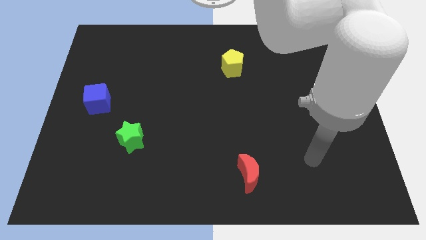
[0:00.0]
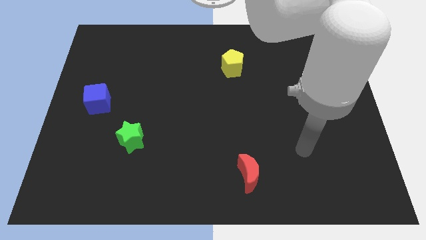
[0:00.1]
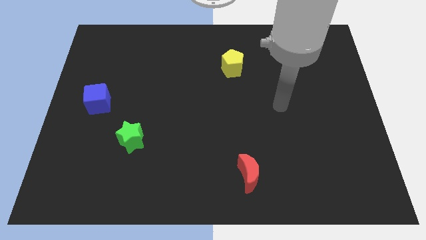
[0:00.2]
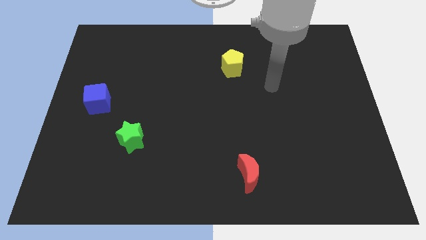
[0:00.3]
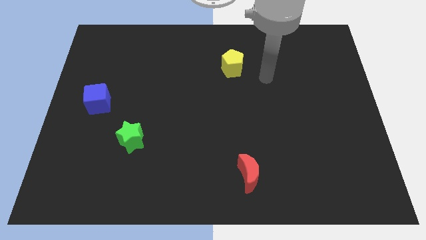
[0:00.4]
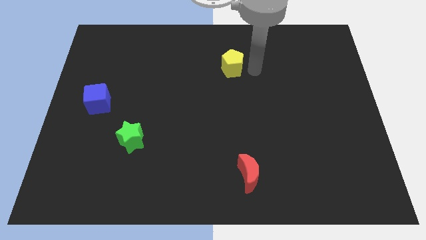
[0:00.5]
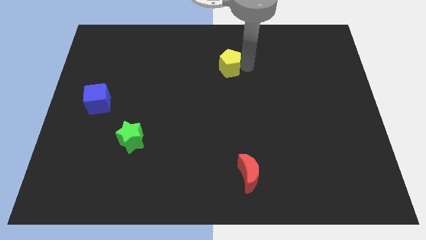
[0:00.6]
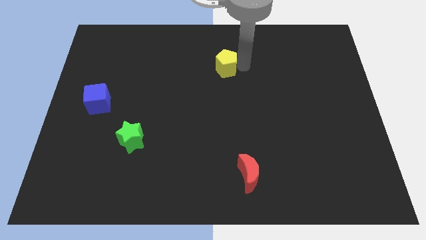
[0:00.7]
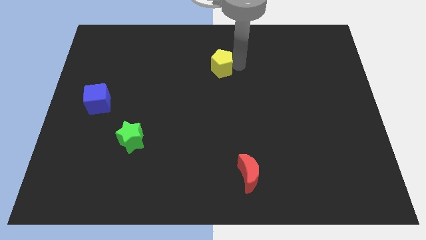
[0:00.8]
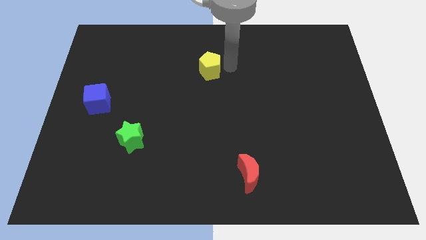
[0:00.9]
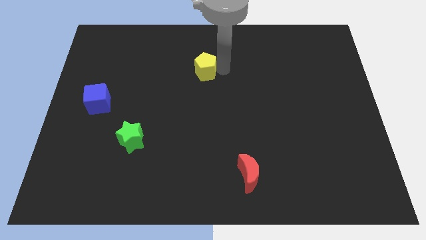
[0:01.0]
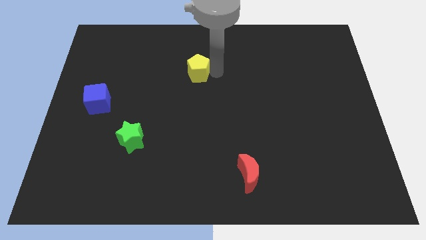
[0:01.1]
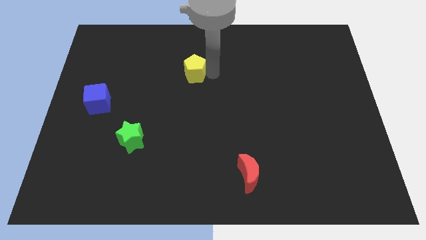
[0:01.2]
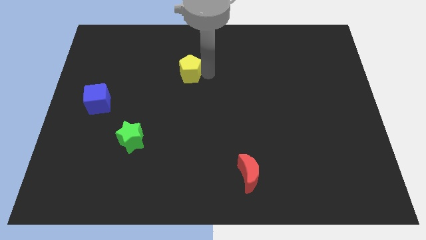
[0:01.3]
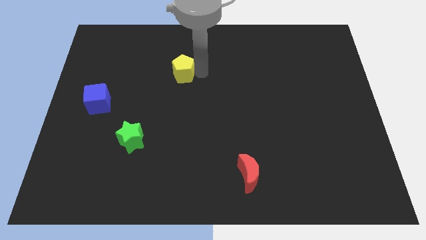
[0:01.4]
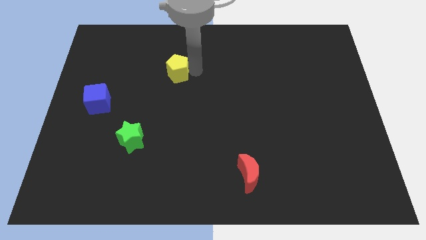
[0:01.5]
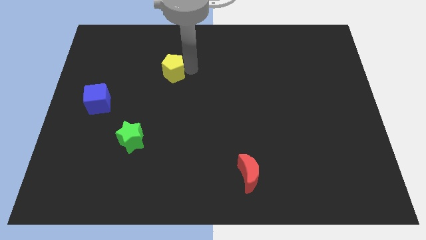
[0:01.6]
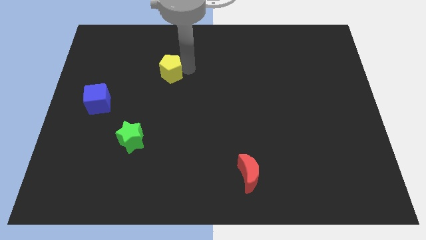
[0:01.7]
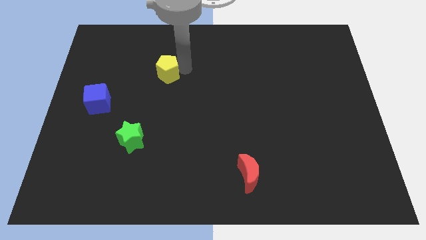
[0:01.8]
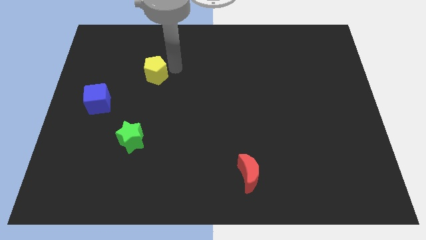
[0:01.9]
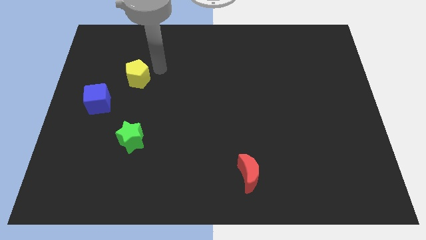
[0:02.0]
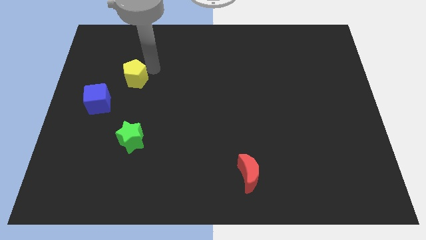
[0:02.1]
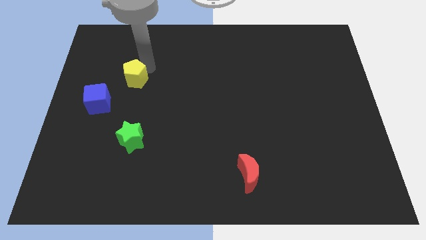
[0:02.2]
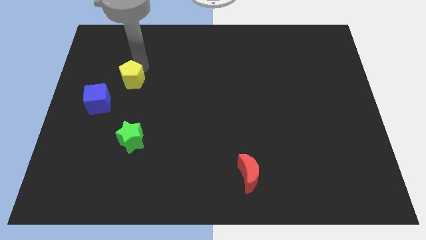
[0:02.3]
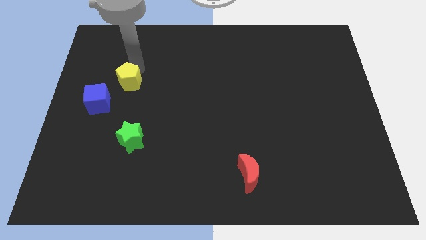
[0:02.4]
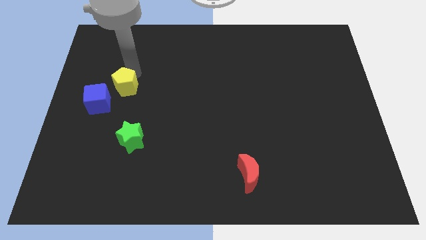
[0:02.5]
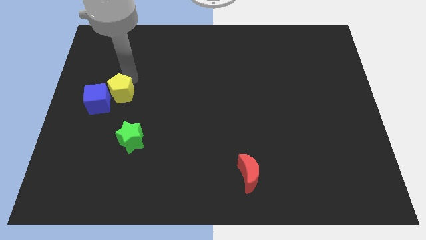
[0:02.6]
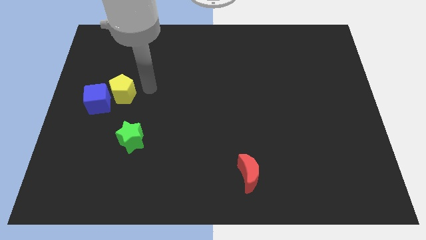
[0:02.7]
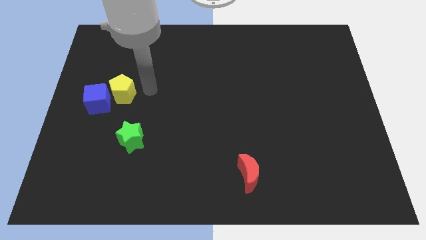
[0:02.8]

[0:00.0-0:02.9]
move the yellow block next to the blue block

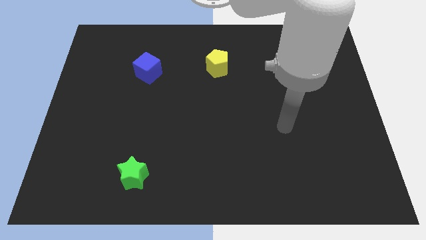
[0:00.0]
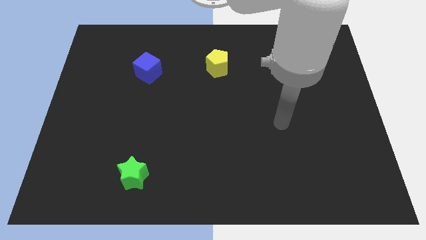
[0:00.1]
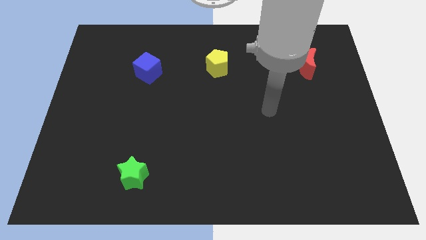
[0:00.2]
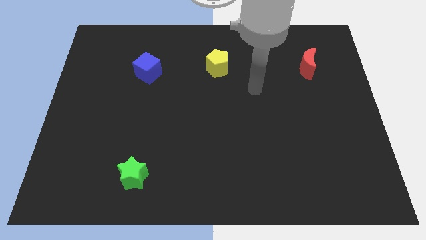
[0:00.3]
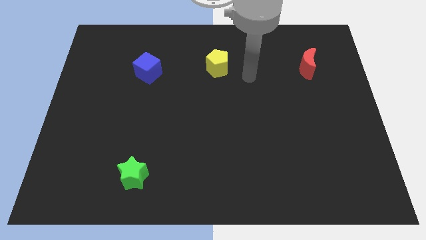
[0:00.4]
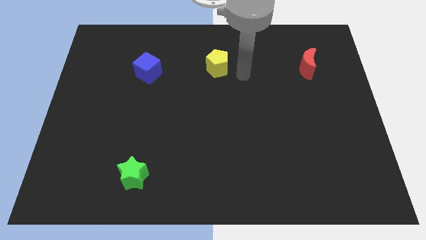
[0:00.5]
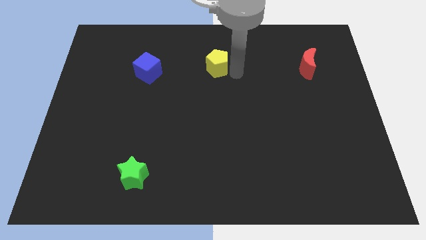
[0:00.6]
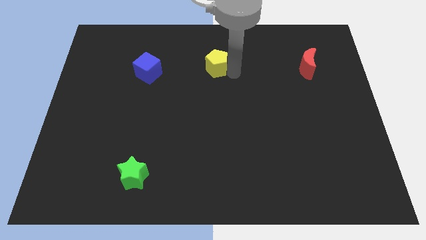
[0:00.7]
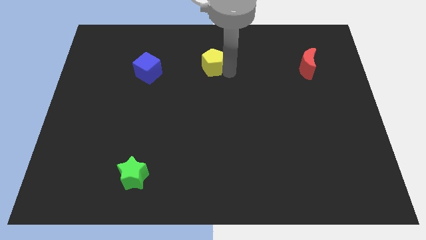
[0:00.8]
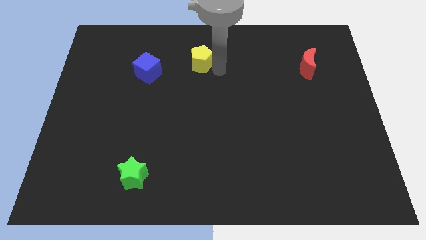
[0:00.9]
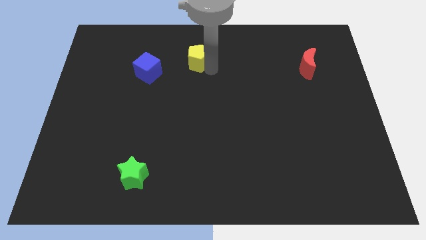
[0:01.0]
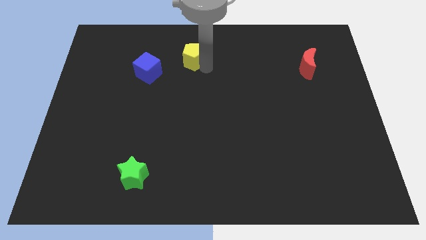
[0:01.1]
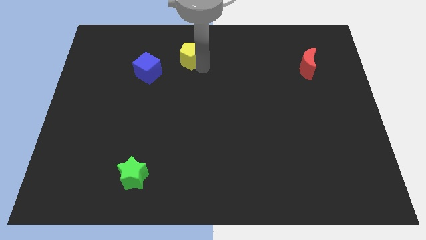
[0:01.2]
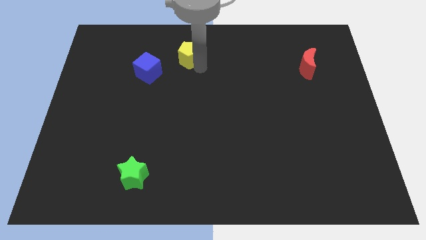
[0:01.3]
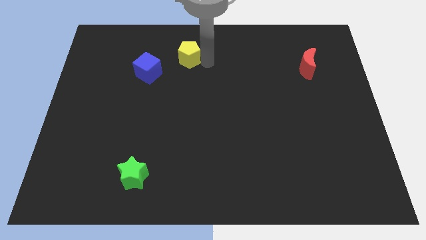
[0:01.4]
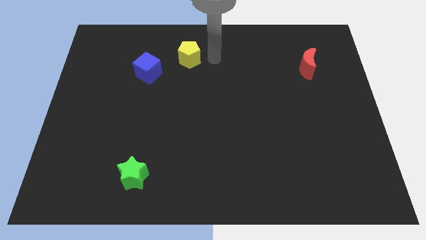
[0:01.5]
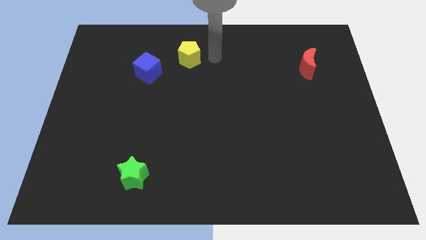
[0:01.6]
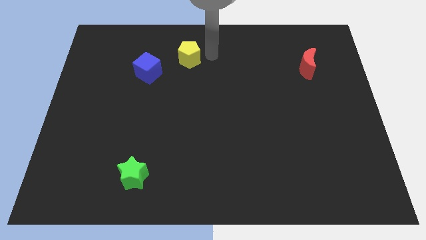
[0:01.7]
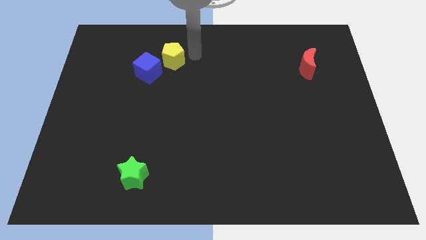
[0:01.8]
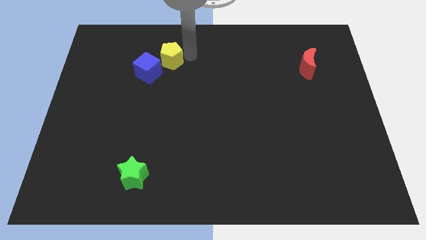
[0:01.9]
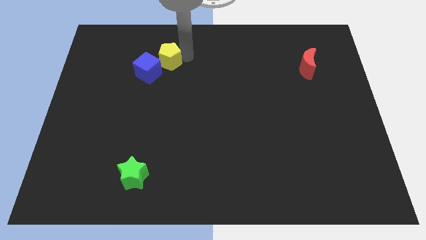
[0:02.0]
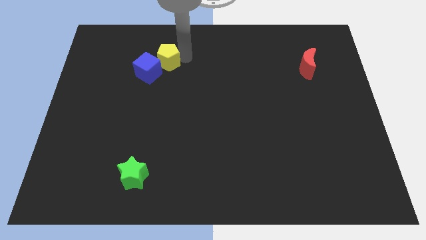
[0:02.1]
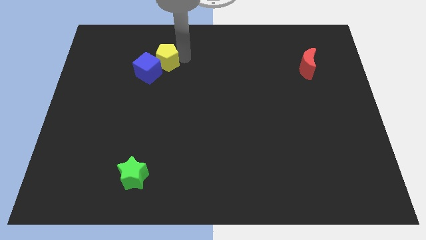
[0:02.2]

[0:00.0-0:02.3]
push the pentagon next to the blue block

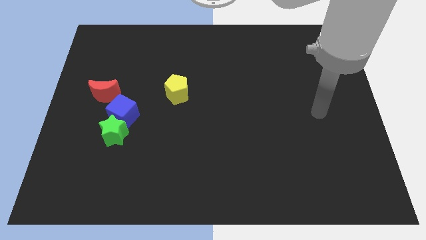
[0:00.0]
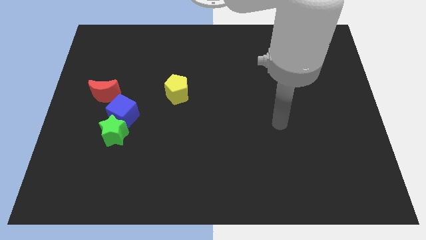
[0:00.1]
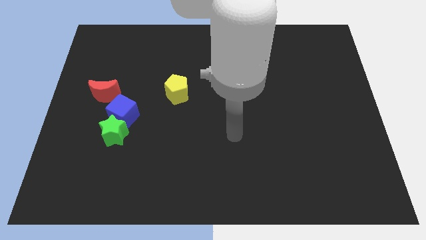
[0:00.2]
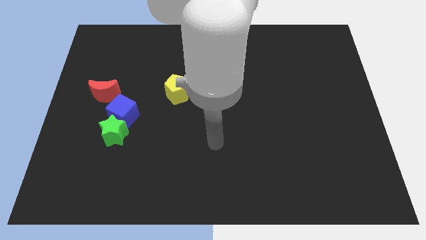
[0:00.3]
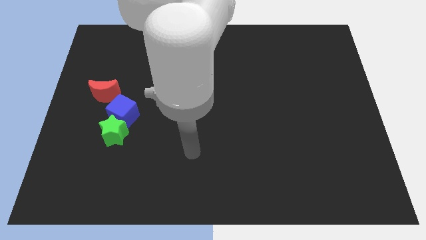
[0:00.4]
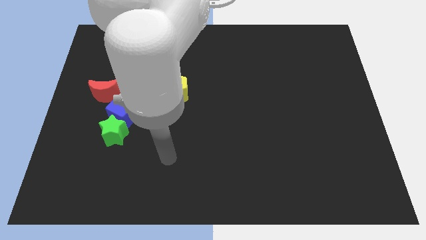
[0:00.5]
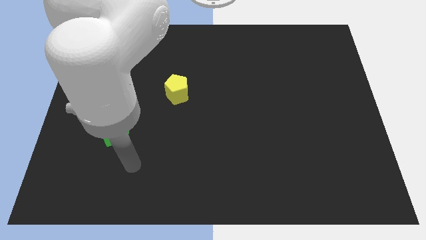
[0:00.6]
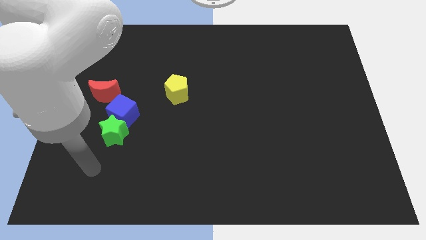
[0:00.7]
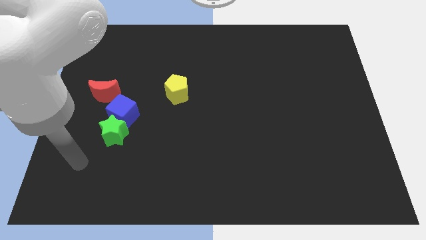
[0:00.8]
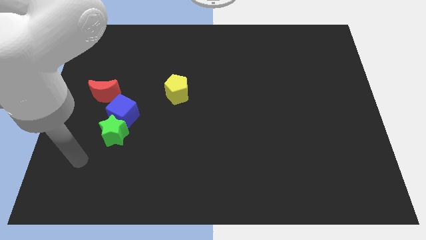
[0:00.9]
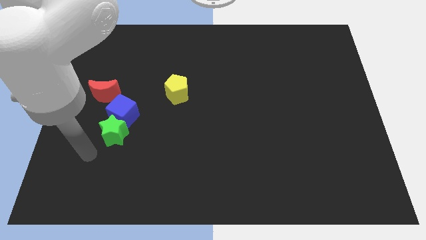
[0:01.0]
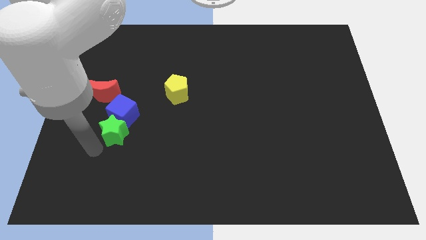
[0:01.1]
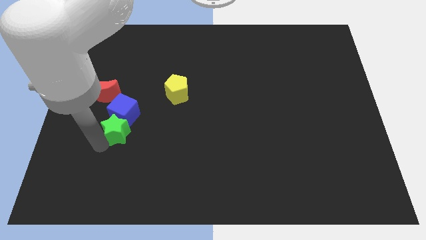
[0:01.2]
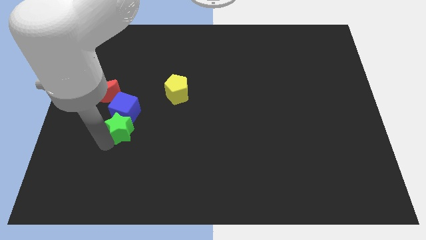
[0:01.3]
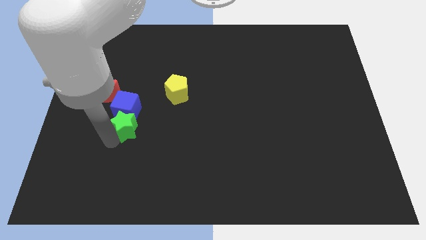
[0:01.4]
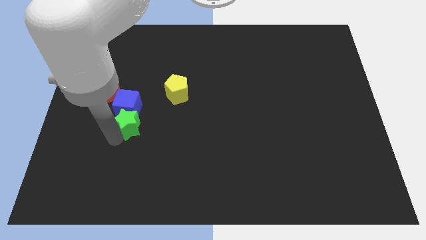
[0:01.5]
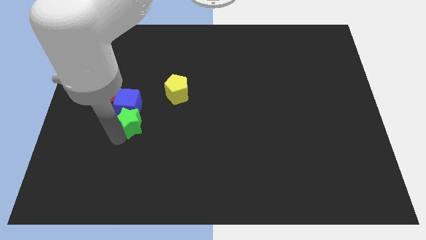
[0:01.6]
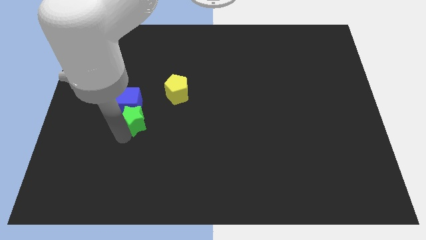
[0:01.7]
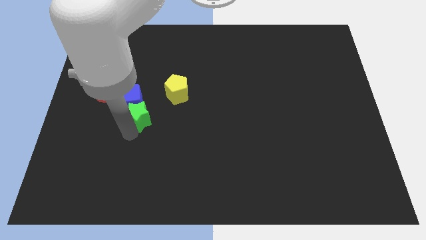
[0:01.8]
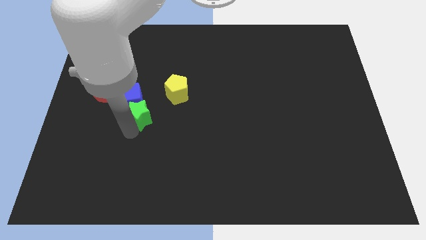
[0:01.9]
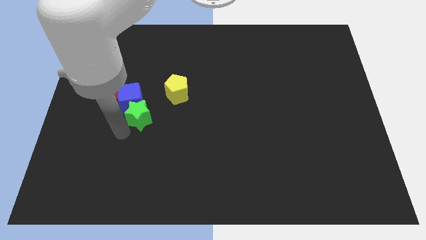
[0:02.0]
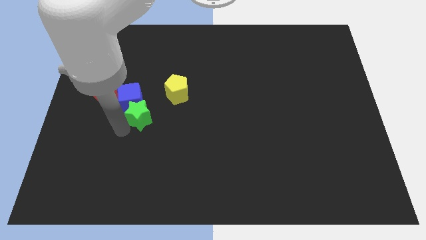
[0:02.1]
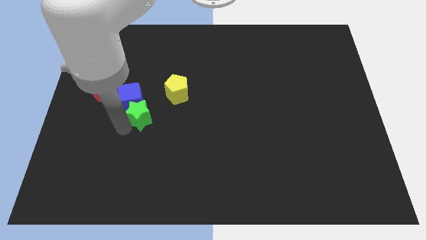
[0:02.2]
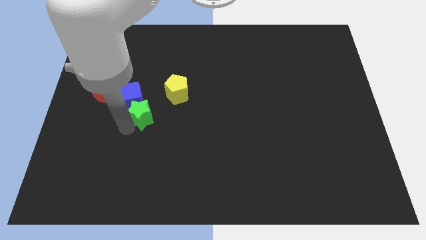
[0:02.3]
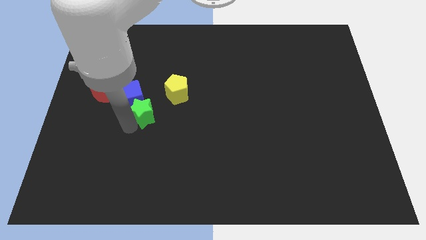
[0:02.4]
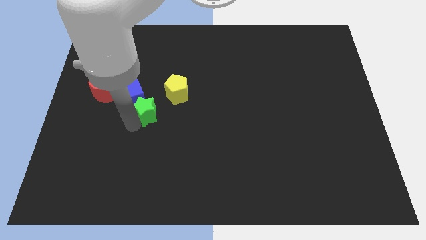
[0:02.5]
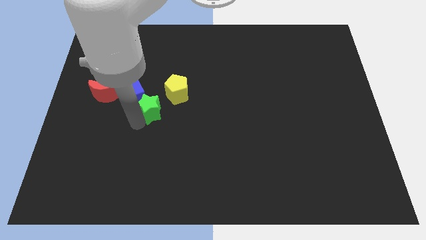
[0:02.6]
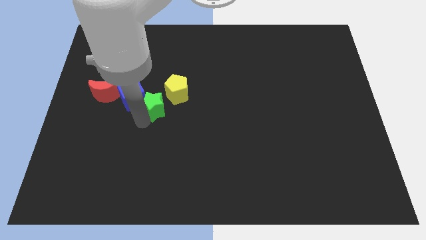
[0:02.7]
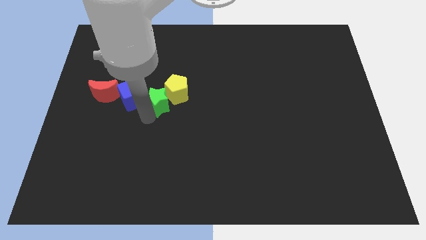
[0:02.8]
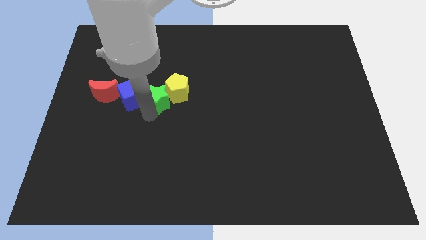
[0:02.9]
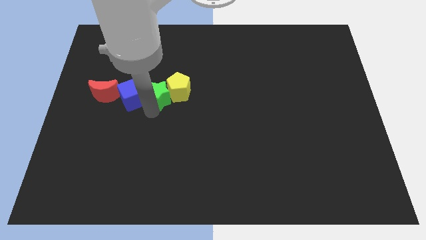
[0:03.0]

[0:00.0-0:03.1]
put the green block close to the pentagon

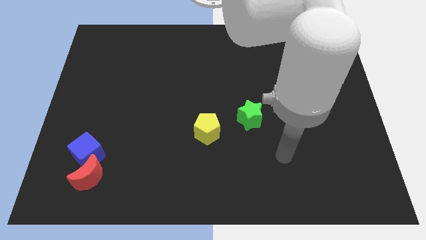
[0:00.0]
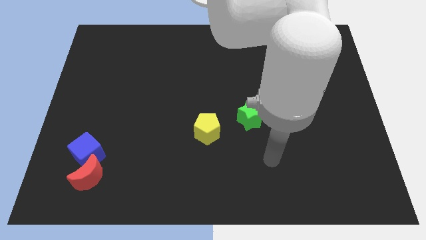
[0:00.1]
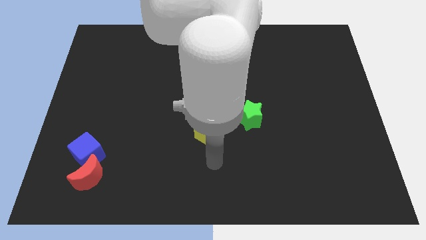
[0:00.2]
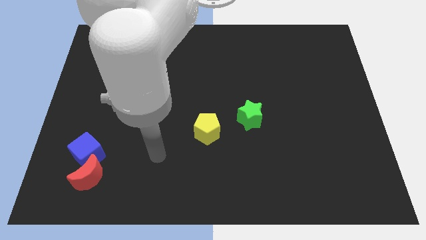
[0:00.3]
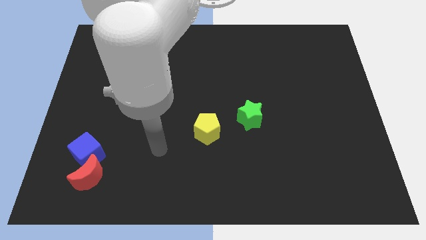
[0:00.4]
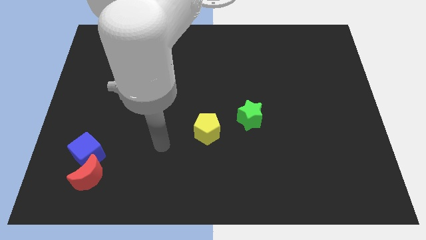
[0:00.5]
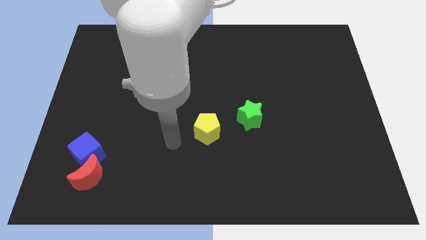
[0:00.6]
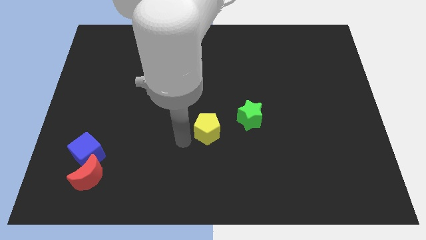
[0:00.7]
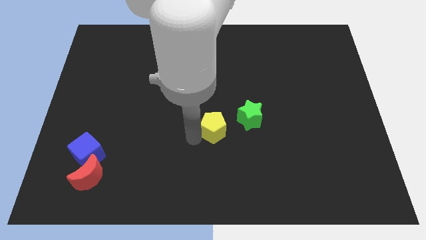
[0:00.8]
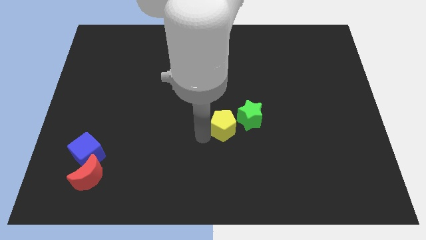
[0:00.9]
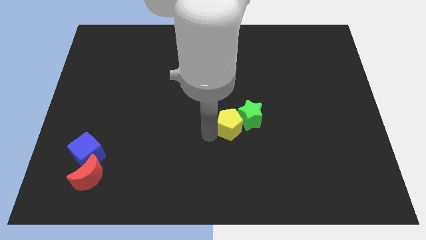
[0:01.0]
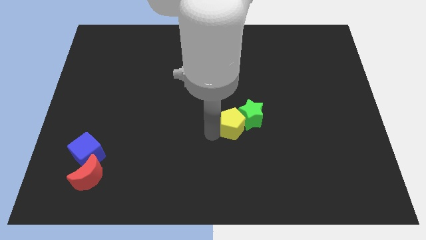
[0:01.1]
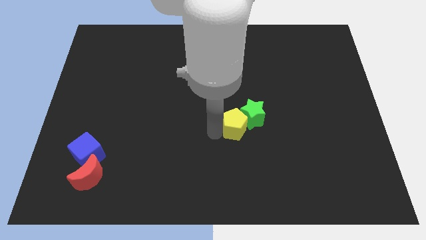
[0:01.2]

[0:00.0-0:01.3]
push the yellow pentagon to the star
